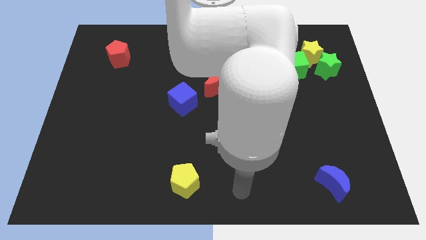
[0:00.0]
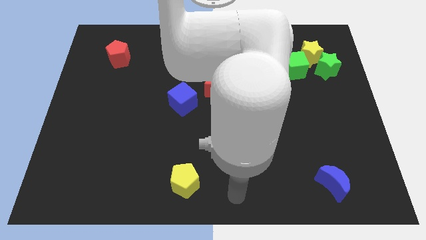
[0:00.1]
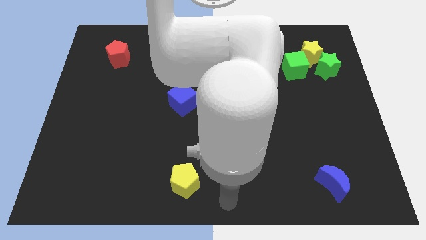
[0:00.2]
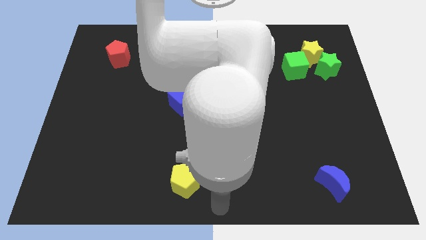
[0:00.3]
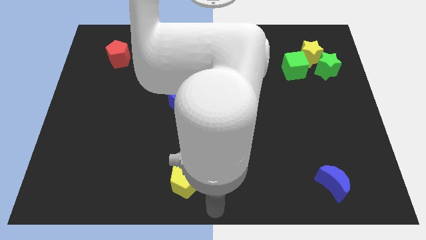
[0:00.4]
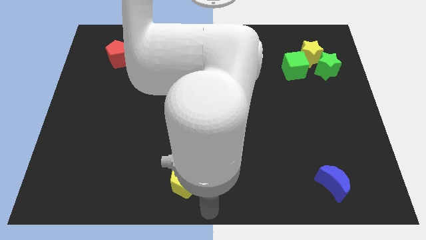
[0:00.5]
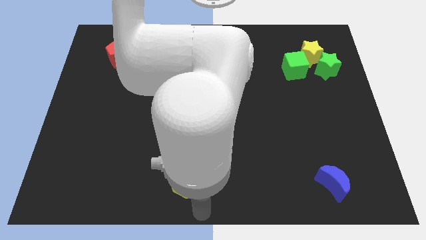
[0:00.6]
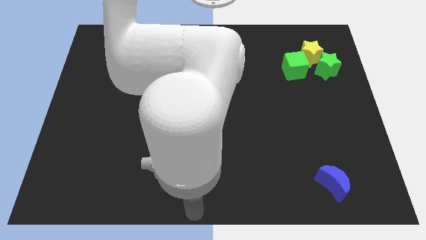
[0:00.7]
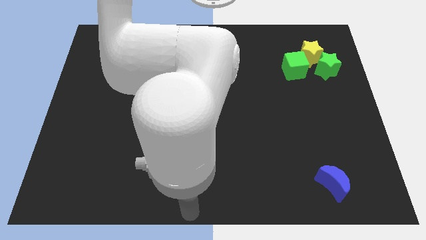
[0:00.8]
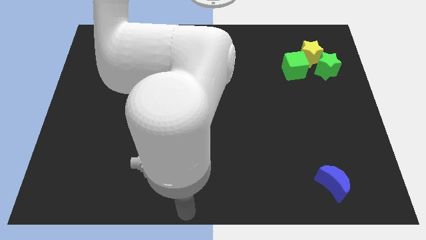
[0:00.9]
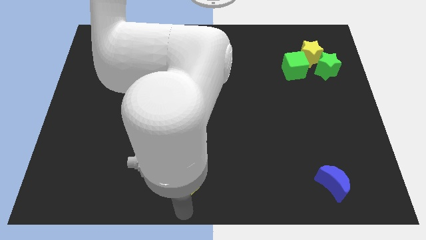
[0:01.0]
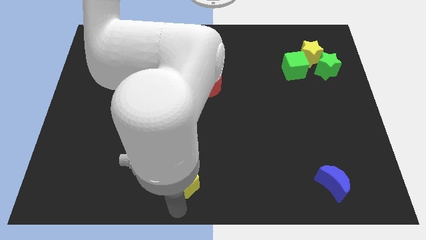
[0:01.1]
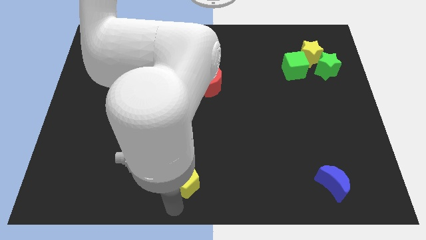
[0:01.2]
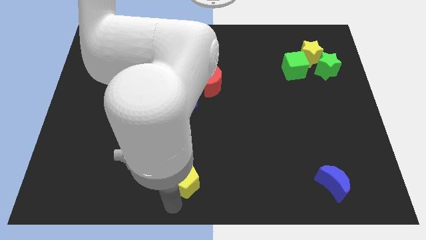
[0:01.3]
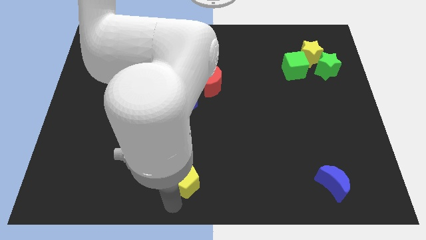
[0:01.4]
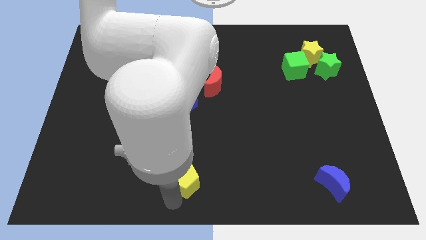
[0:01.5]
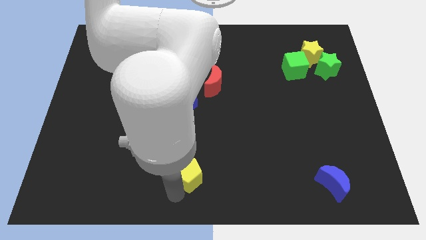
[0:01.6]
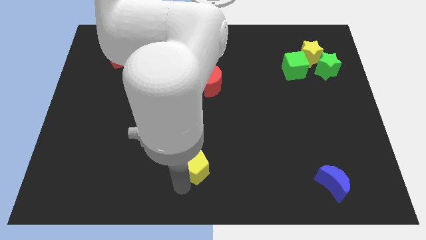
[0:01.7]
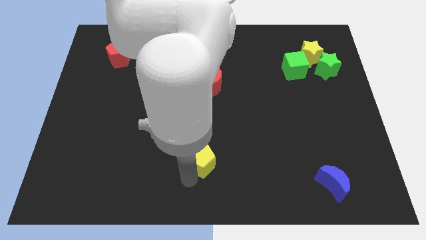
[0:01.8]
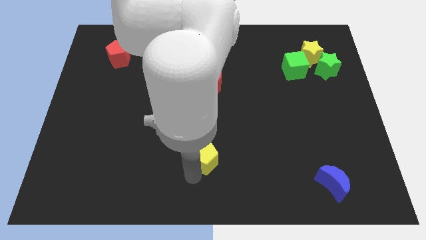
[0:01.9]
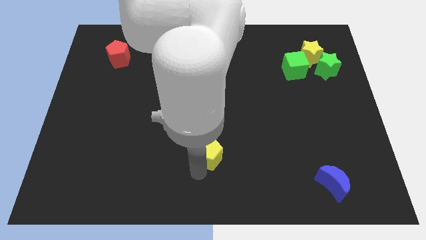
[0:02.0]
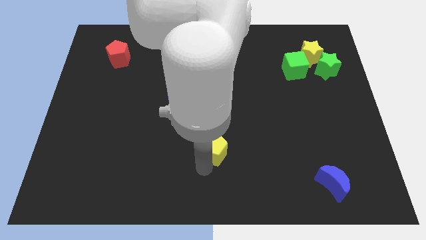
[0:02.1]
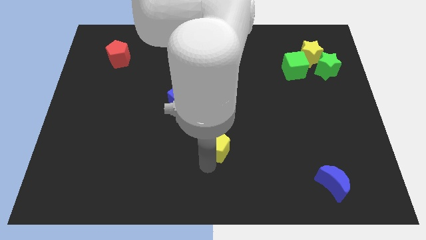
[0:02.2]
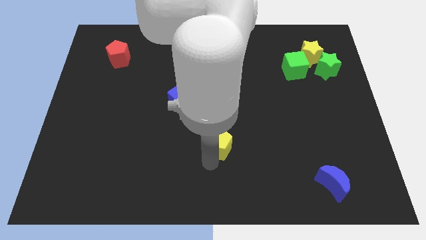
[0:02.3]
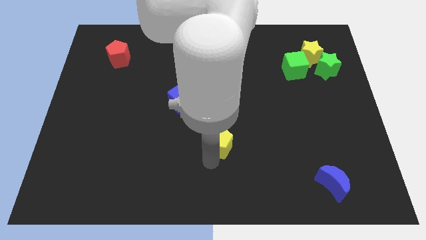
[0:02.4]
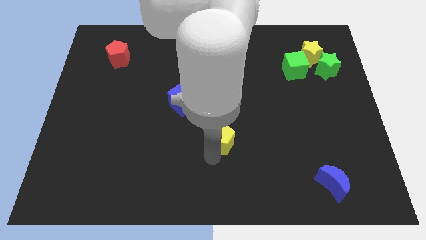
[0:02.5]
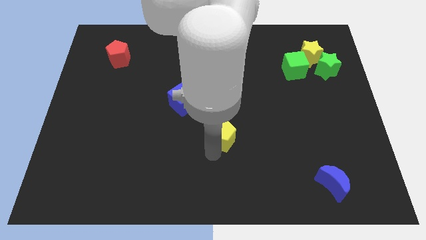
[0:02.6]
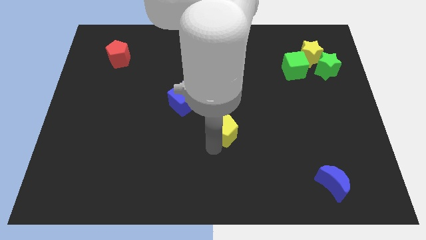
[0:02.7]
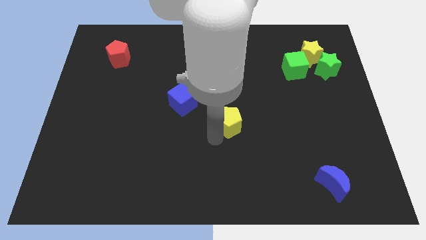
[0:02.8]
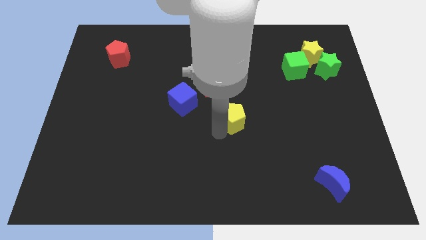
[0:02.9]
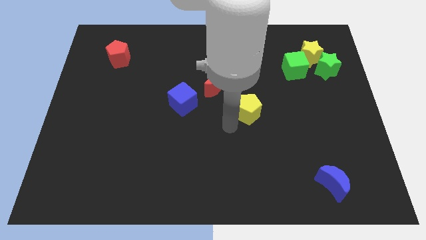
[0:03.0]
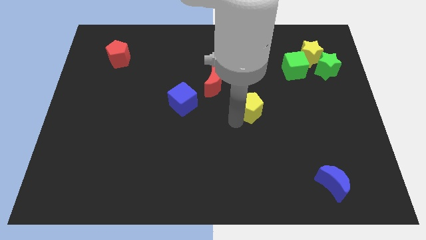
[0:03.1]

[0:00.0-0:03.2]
place yellow pentagon at center

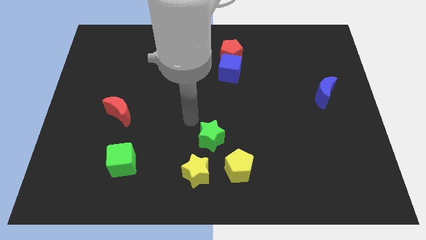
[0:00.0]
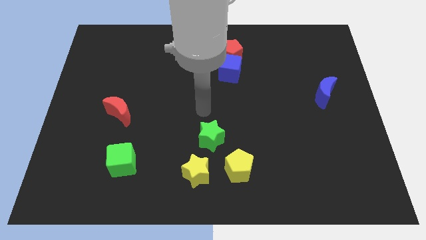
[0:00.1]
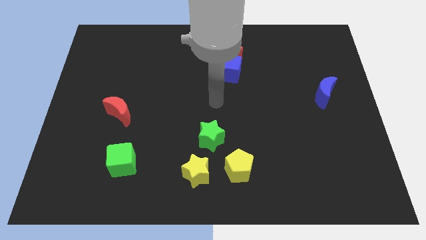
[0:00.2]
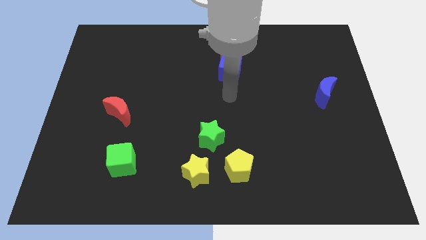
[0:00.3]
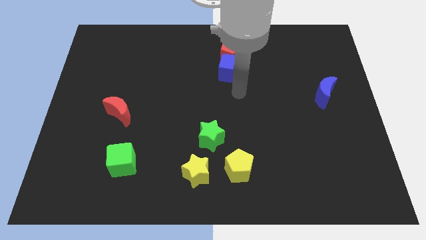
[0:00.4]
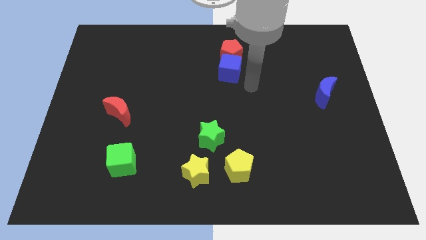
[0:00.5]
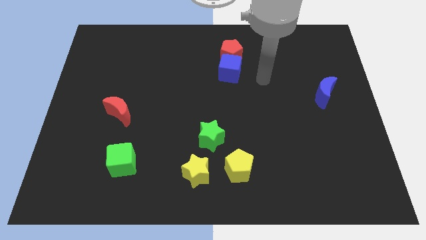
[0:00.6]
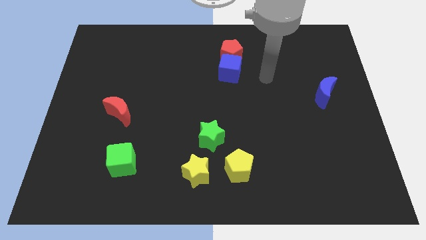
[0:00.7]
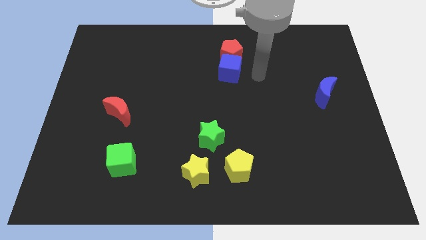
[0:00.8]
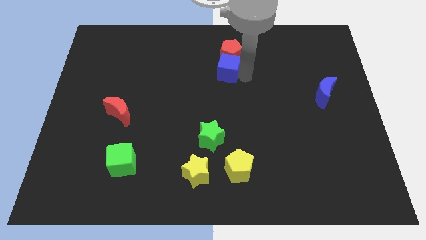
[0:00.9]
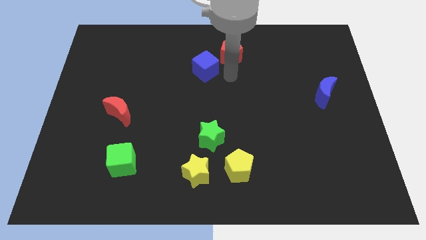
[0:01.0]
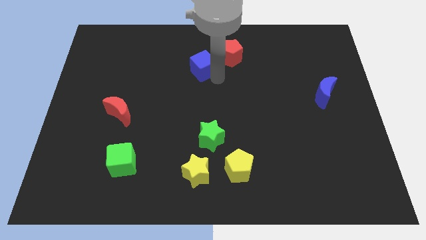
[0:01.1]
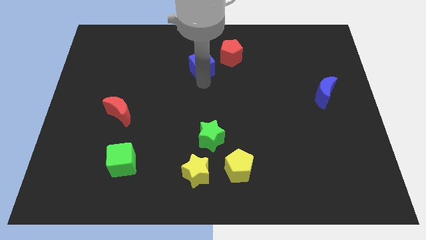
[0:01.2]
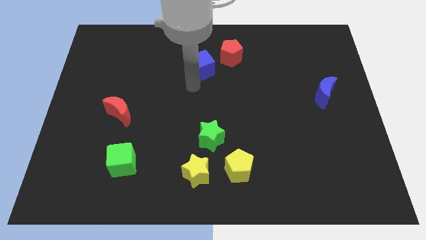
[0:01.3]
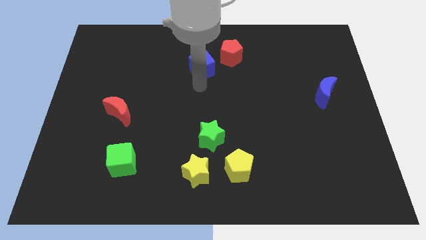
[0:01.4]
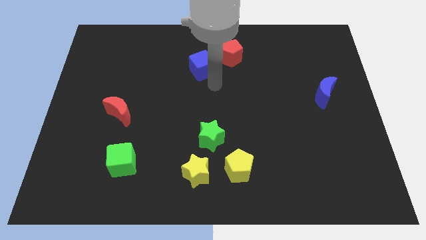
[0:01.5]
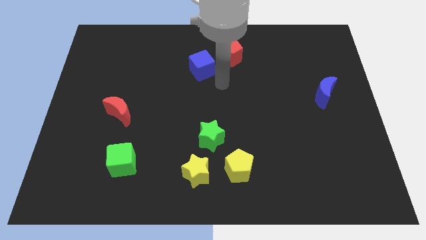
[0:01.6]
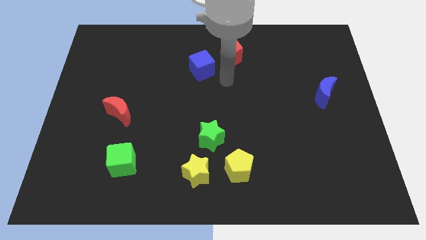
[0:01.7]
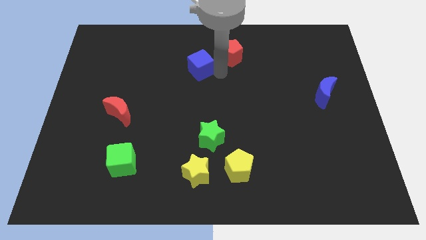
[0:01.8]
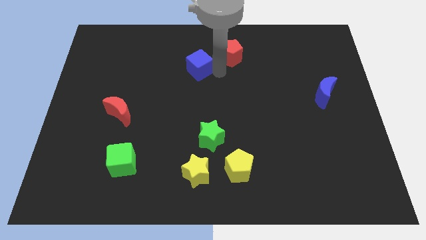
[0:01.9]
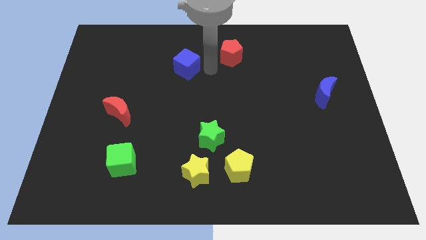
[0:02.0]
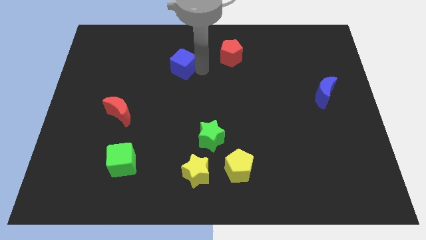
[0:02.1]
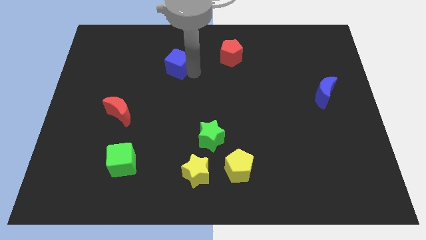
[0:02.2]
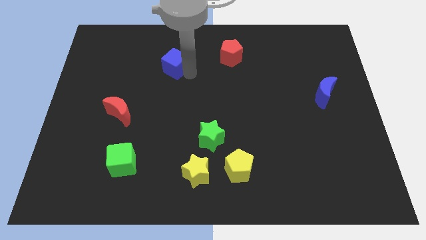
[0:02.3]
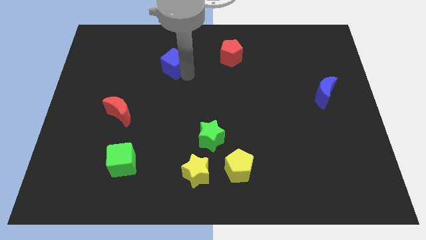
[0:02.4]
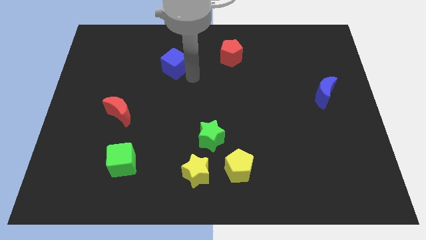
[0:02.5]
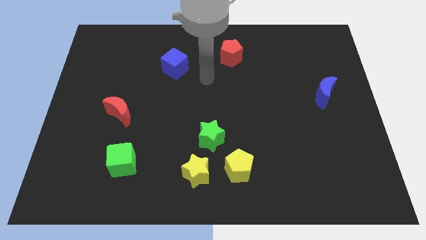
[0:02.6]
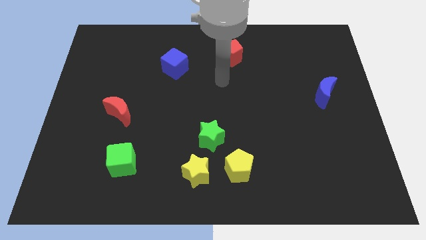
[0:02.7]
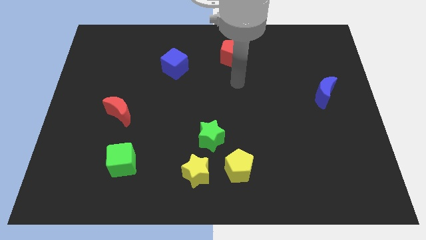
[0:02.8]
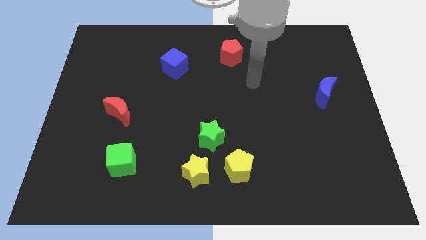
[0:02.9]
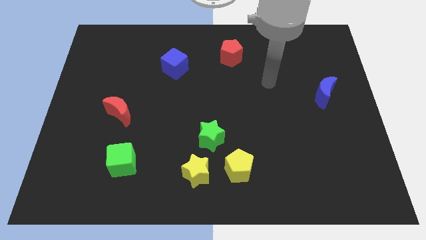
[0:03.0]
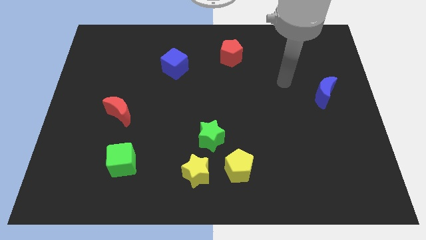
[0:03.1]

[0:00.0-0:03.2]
move the blue cube away from the red pentagon

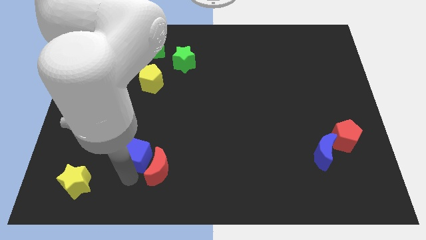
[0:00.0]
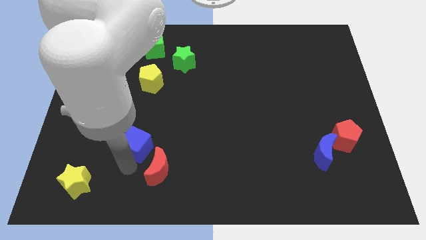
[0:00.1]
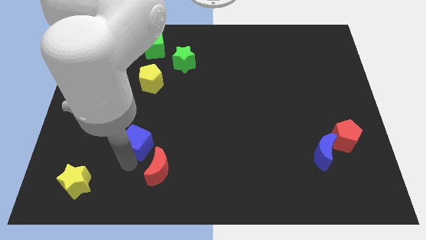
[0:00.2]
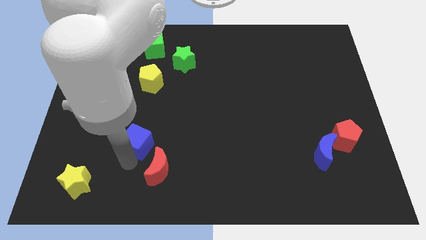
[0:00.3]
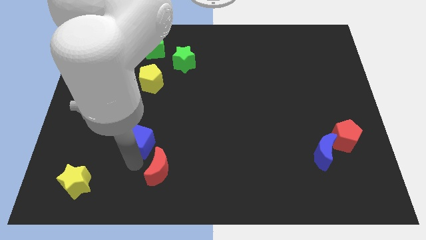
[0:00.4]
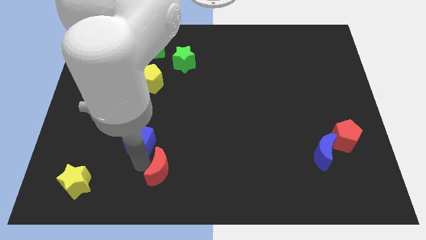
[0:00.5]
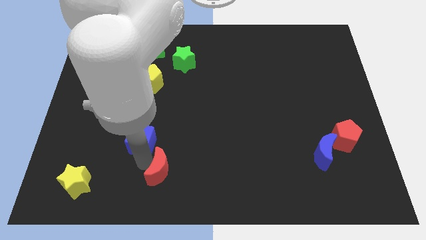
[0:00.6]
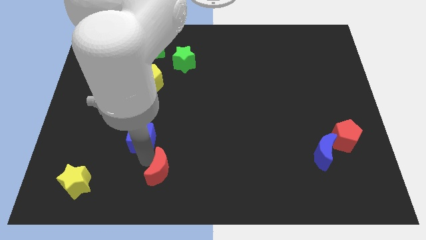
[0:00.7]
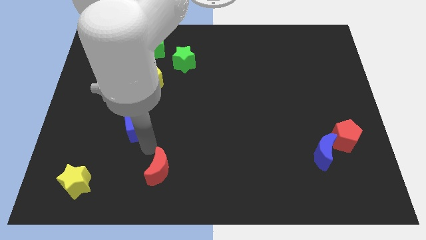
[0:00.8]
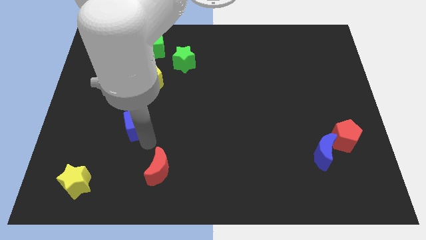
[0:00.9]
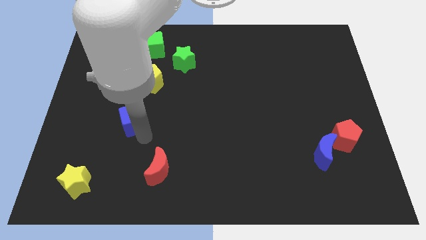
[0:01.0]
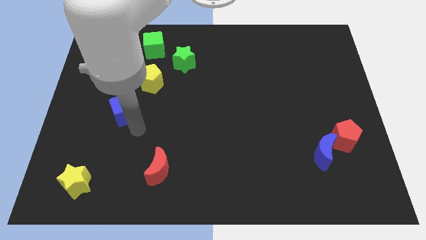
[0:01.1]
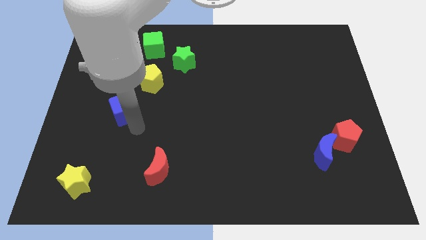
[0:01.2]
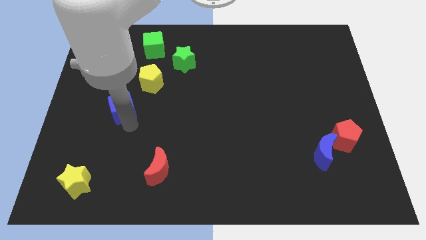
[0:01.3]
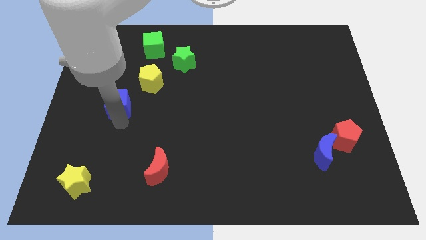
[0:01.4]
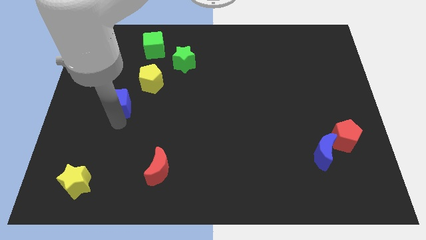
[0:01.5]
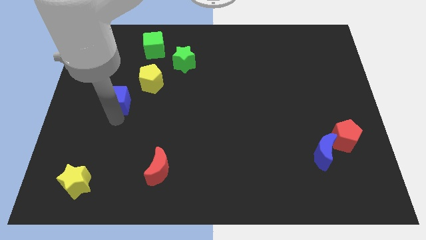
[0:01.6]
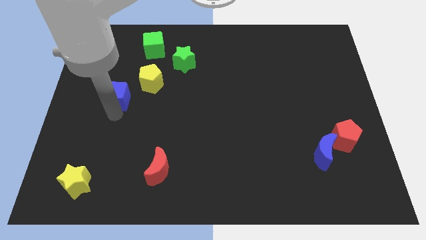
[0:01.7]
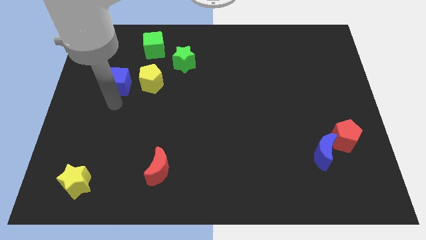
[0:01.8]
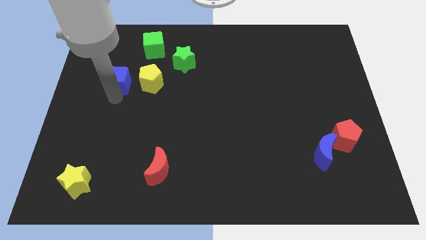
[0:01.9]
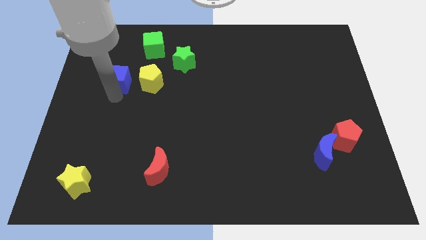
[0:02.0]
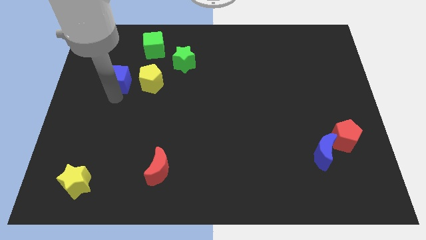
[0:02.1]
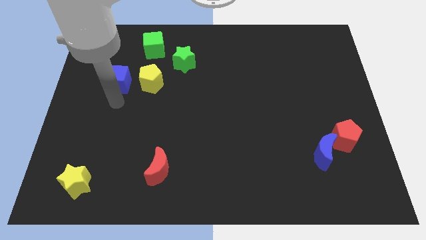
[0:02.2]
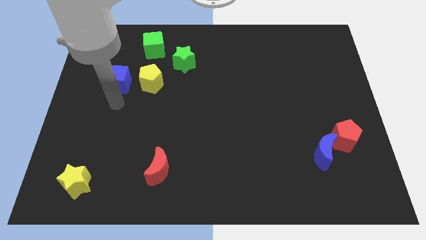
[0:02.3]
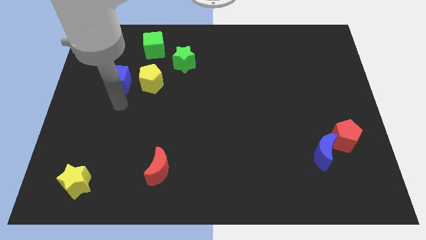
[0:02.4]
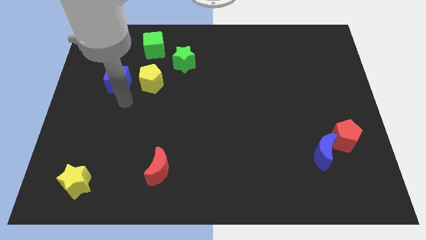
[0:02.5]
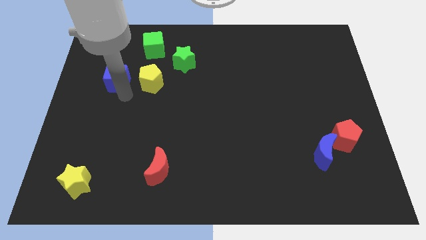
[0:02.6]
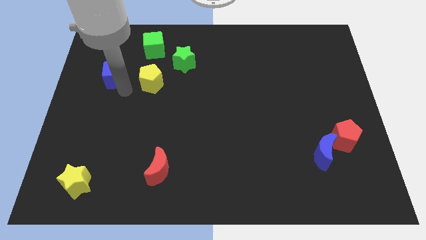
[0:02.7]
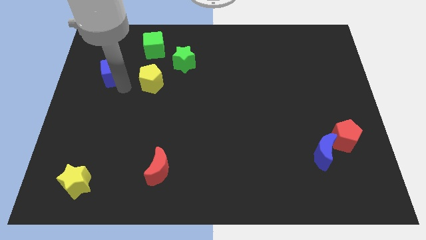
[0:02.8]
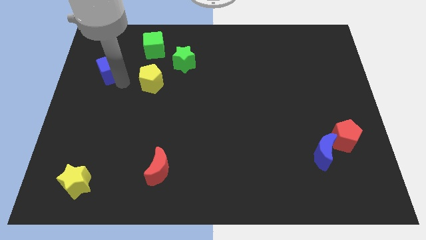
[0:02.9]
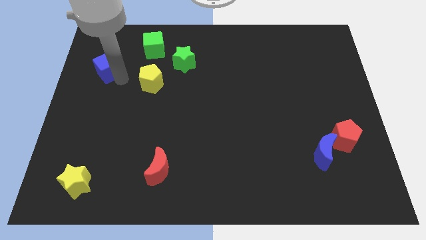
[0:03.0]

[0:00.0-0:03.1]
separate blue cube from red moon
